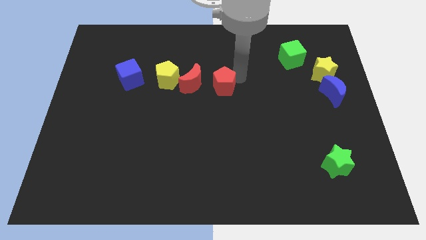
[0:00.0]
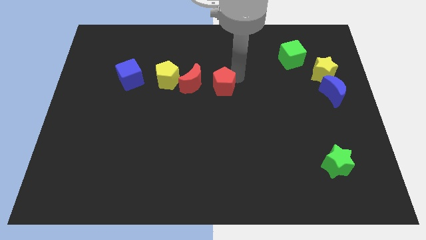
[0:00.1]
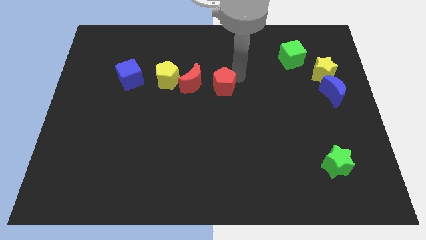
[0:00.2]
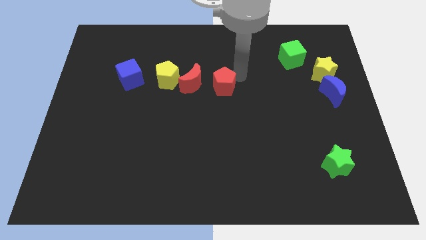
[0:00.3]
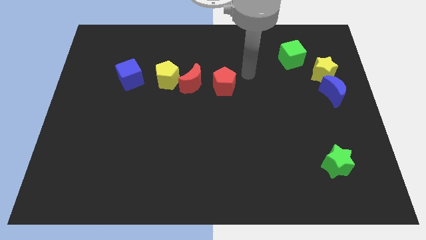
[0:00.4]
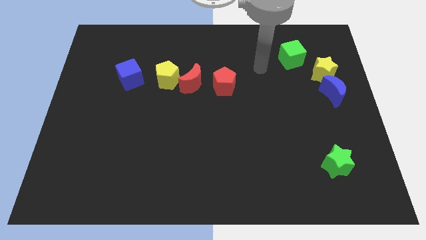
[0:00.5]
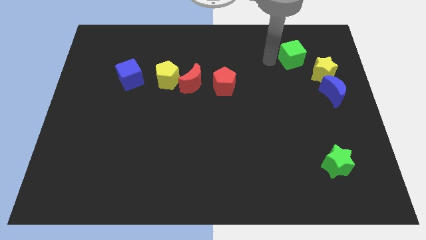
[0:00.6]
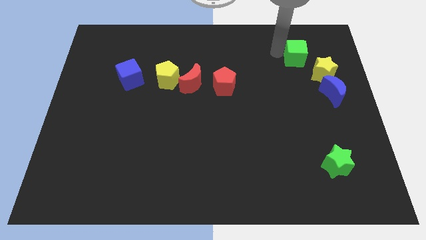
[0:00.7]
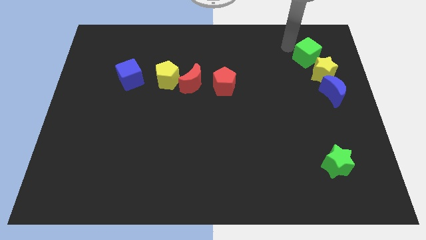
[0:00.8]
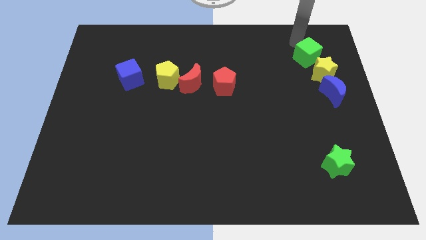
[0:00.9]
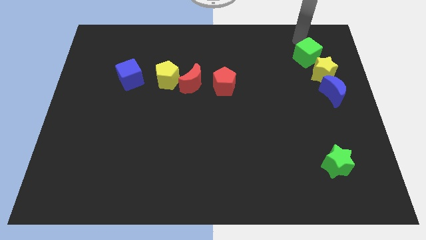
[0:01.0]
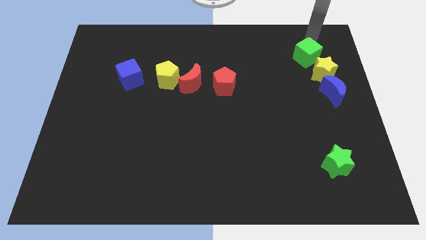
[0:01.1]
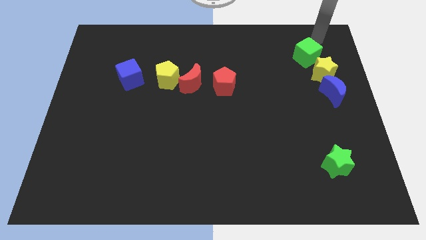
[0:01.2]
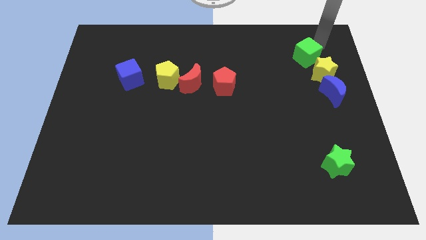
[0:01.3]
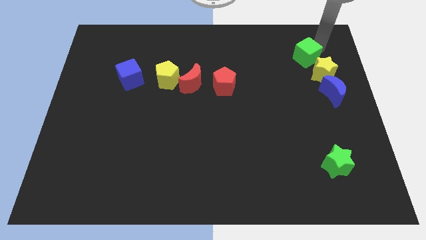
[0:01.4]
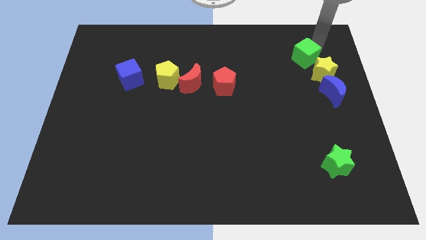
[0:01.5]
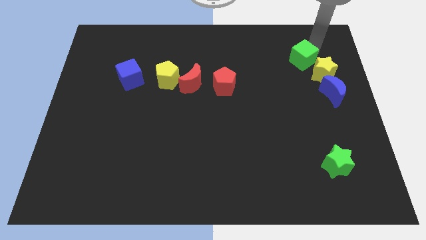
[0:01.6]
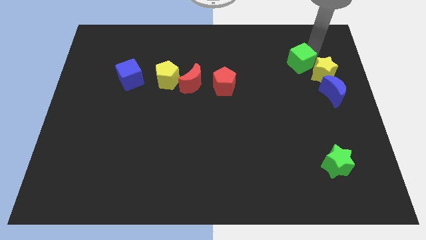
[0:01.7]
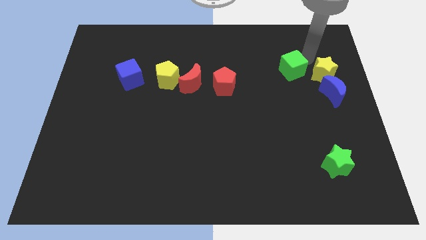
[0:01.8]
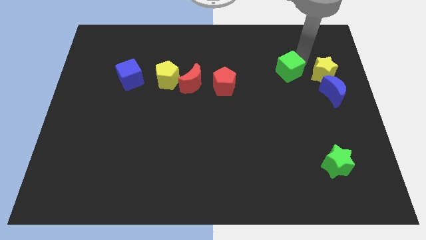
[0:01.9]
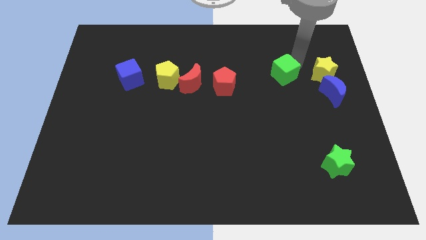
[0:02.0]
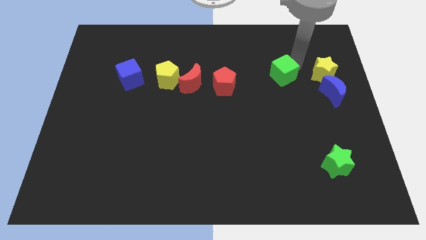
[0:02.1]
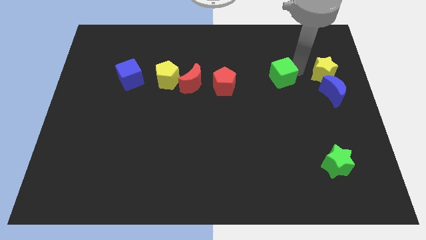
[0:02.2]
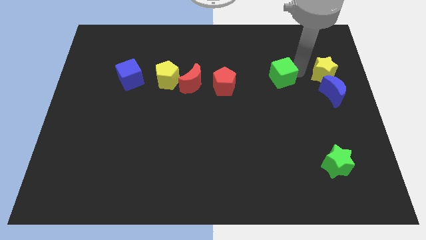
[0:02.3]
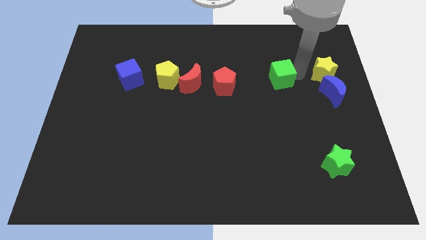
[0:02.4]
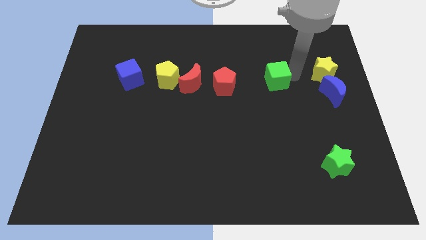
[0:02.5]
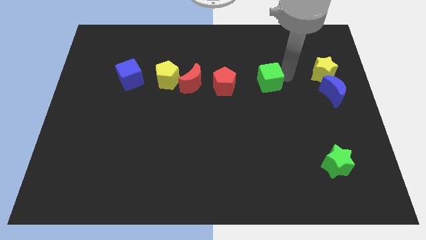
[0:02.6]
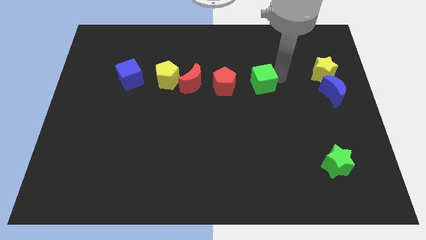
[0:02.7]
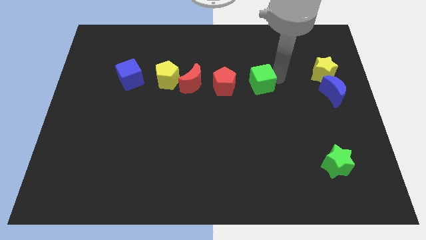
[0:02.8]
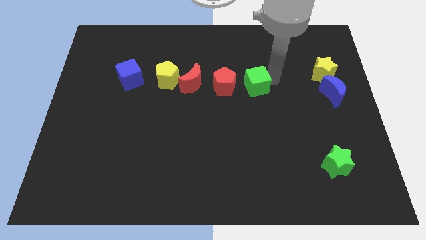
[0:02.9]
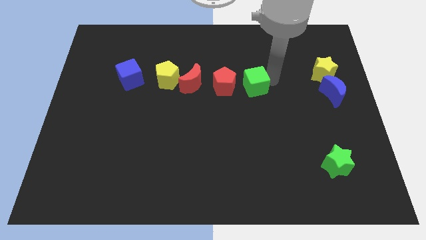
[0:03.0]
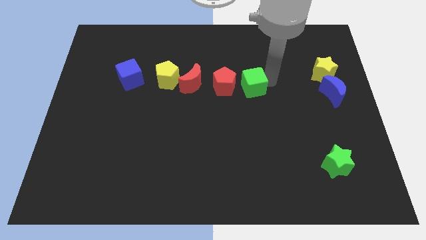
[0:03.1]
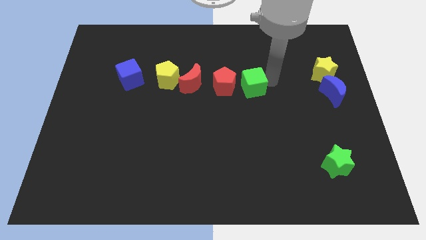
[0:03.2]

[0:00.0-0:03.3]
push green cube to the right of the red pentagon

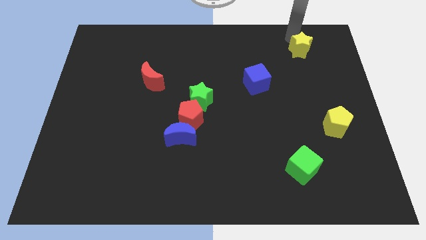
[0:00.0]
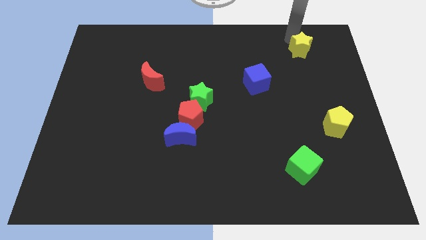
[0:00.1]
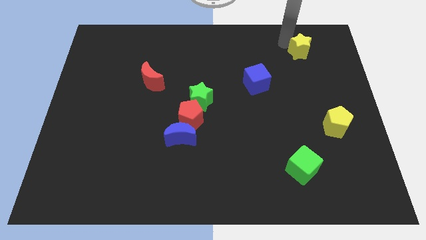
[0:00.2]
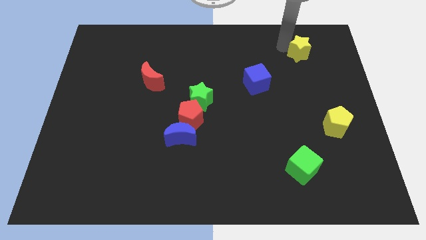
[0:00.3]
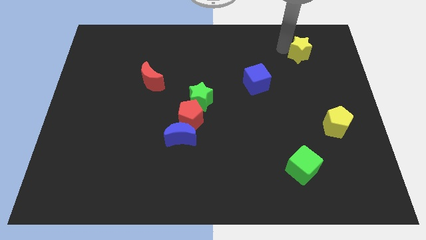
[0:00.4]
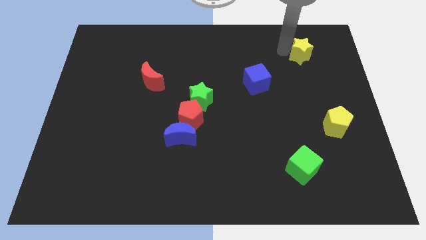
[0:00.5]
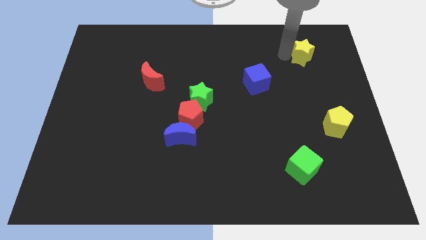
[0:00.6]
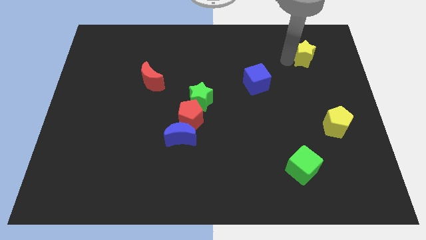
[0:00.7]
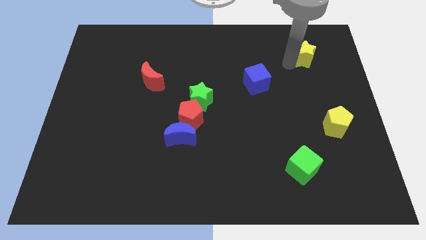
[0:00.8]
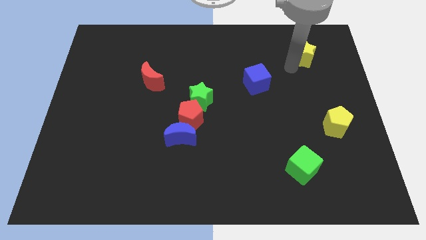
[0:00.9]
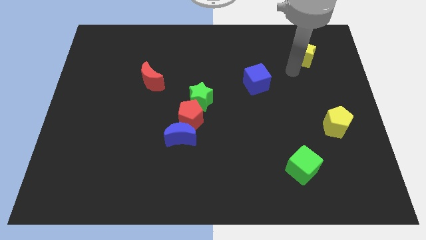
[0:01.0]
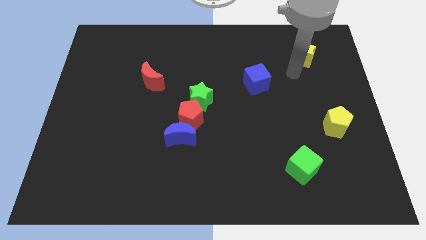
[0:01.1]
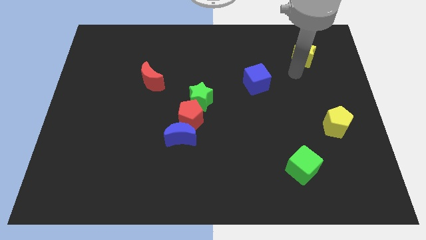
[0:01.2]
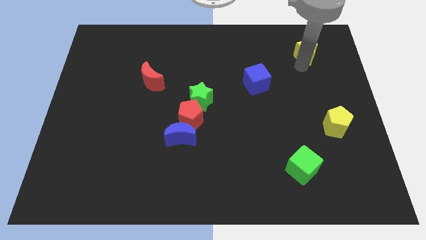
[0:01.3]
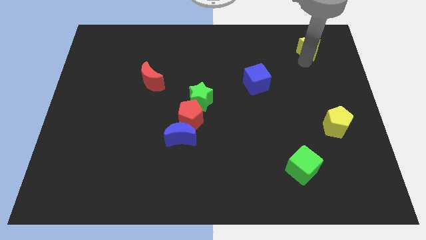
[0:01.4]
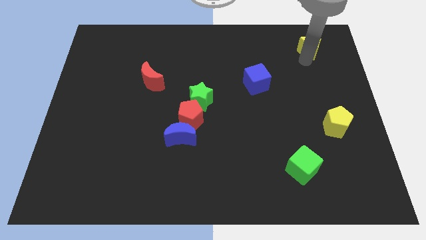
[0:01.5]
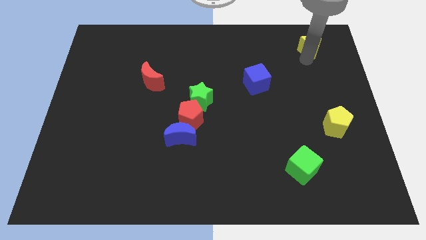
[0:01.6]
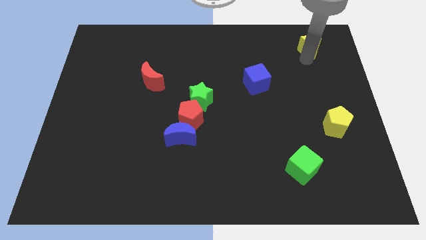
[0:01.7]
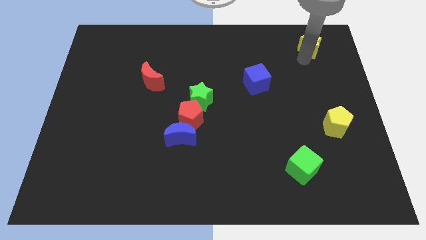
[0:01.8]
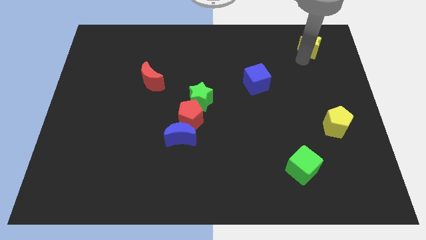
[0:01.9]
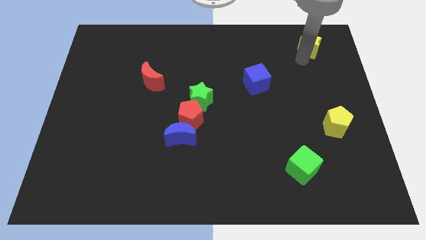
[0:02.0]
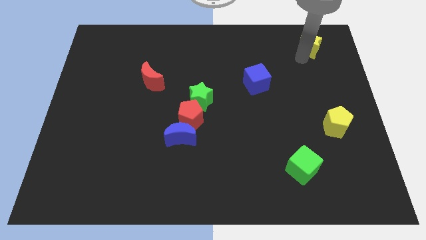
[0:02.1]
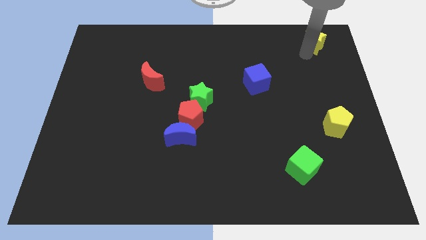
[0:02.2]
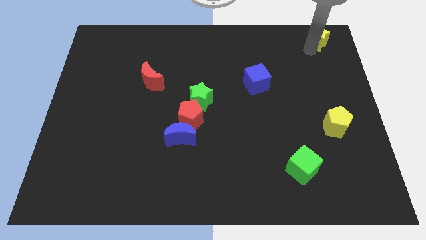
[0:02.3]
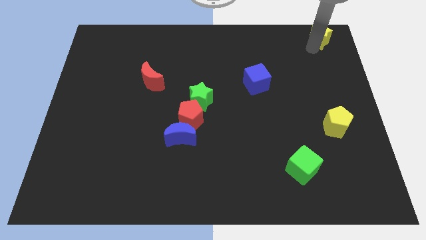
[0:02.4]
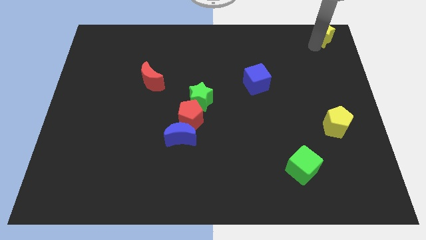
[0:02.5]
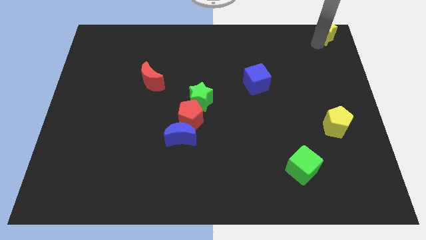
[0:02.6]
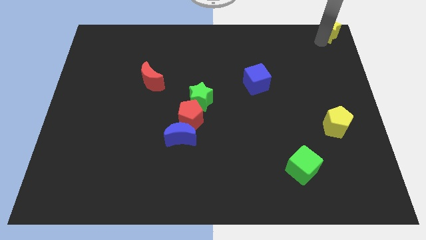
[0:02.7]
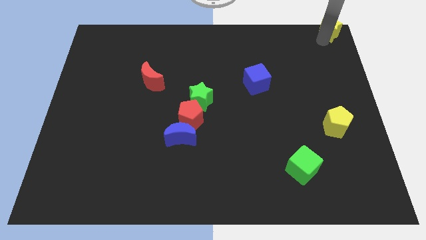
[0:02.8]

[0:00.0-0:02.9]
place yellow star towards top right corner

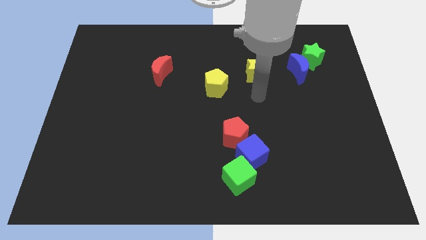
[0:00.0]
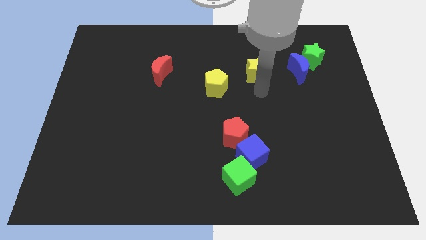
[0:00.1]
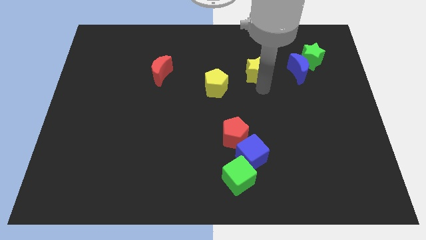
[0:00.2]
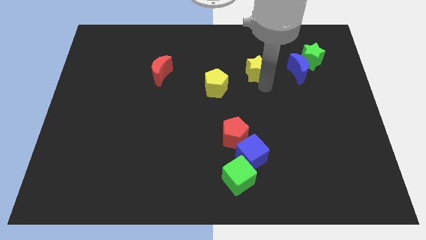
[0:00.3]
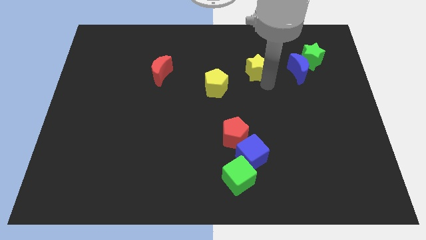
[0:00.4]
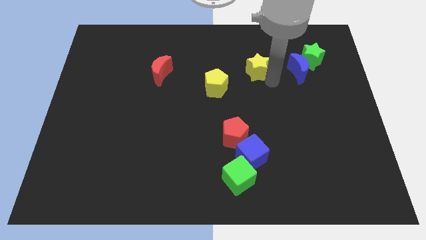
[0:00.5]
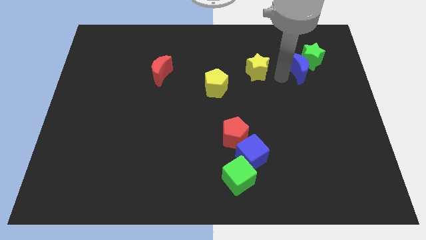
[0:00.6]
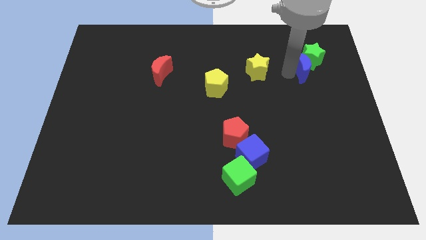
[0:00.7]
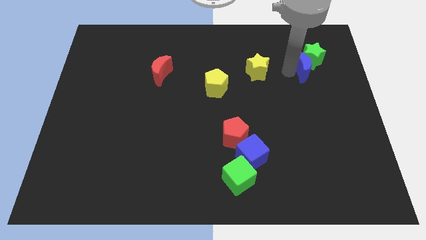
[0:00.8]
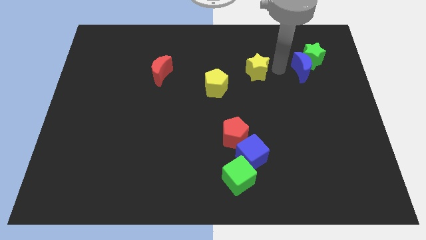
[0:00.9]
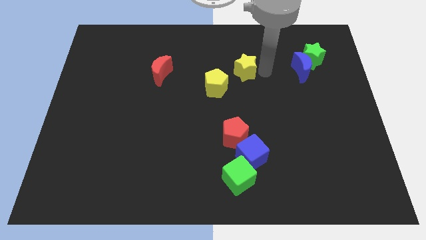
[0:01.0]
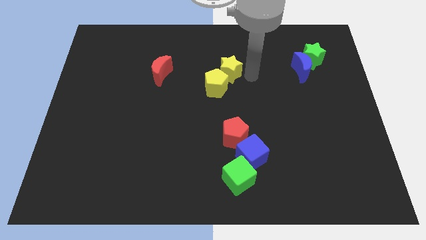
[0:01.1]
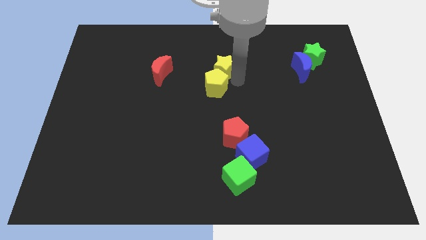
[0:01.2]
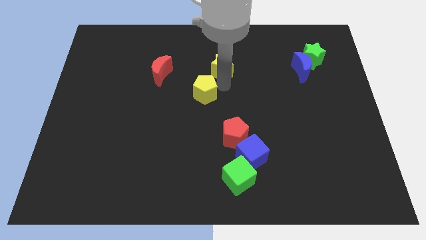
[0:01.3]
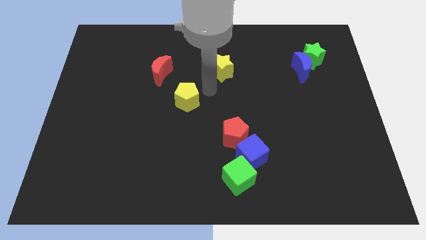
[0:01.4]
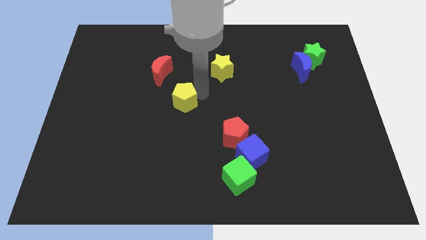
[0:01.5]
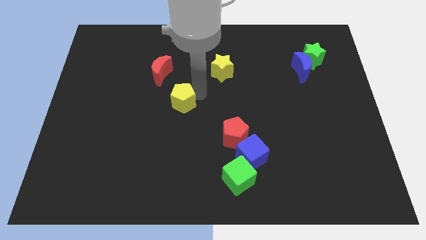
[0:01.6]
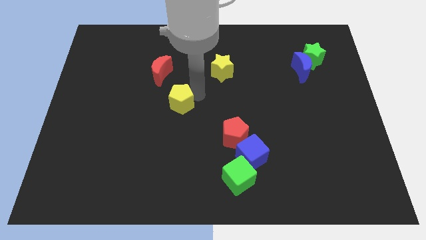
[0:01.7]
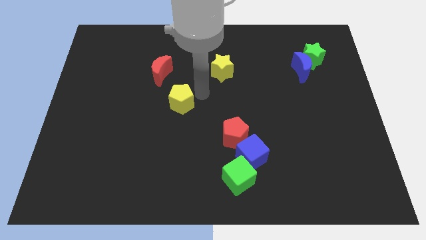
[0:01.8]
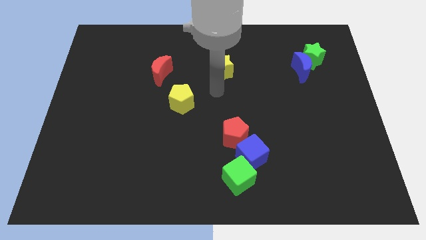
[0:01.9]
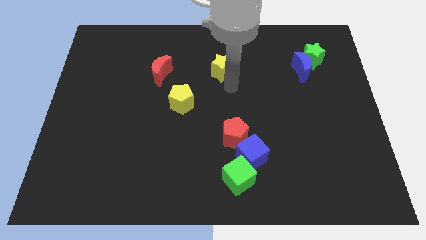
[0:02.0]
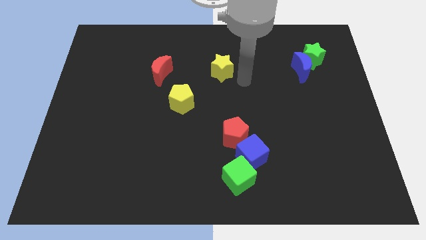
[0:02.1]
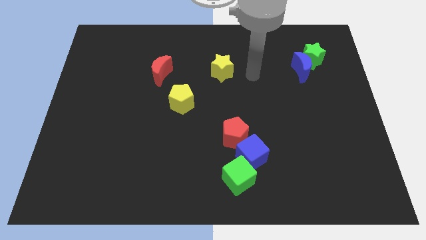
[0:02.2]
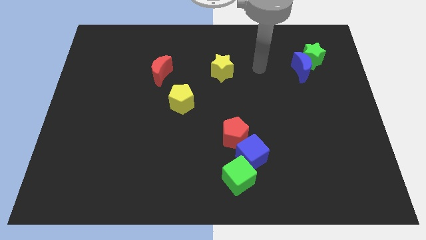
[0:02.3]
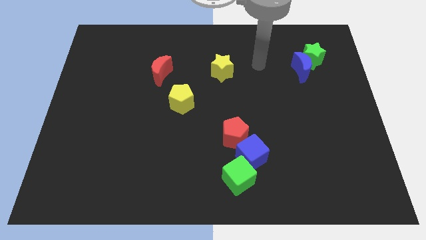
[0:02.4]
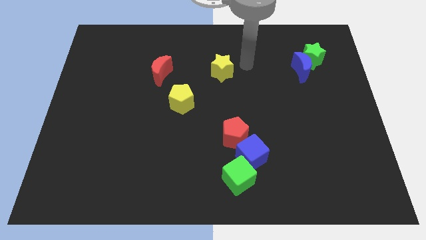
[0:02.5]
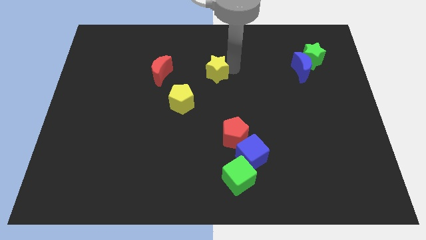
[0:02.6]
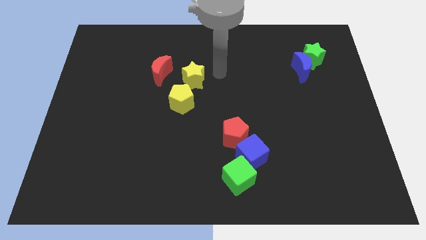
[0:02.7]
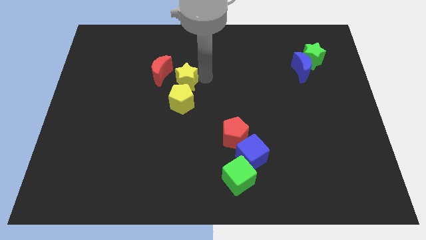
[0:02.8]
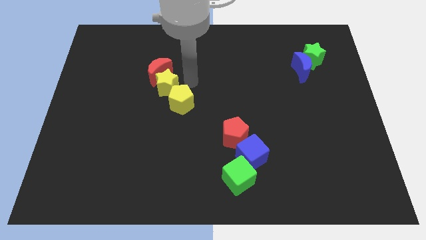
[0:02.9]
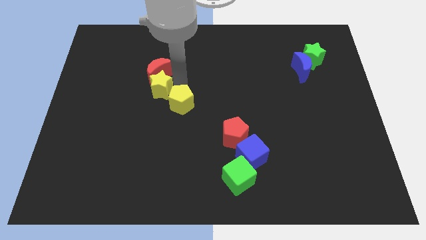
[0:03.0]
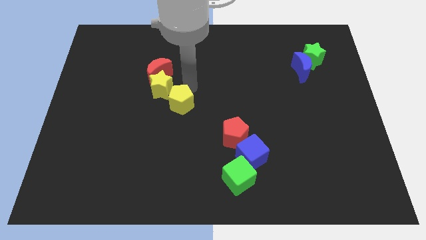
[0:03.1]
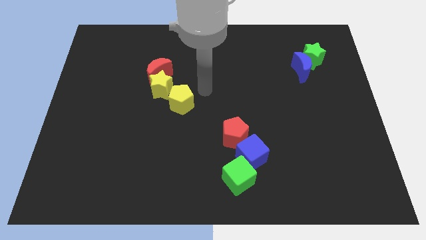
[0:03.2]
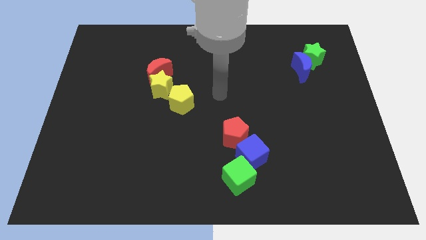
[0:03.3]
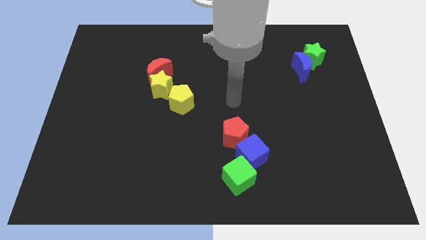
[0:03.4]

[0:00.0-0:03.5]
place the red crescente yellow star and yellow pentagon in a diagonal line
